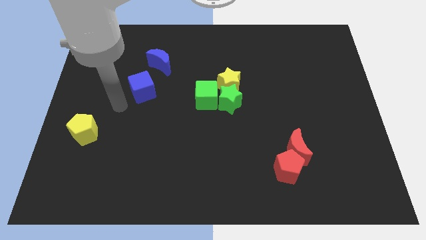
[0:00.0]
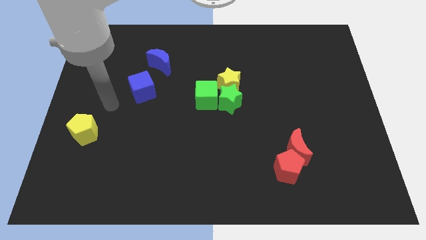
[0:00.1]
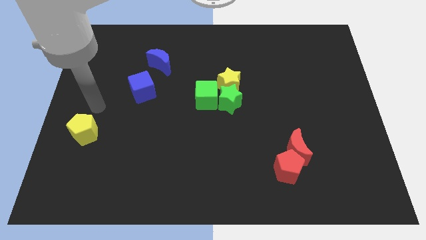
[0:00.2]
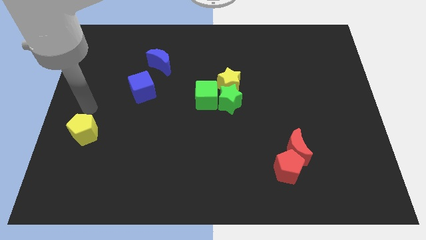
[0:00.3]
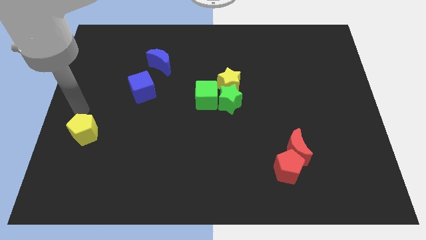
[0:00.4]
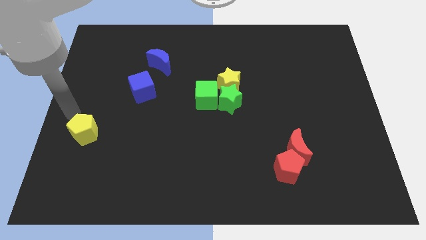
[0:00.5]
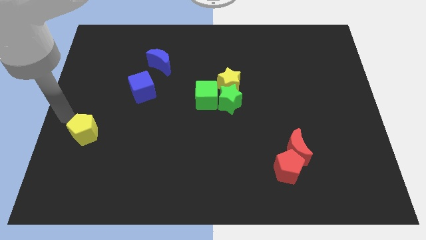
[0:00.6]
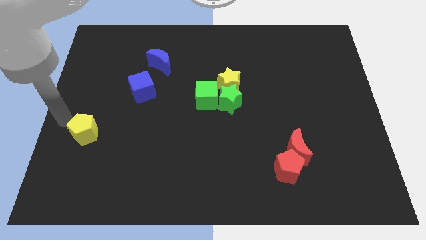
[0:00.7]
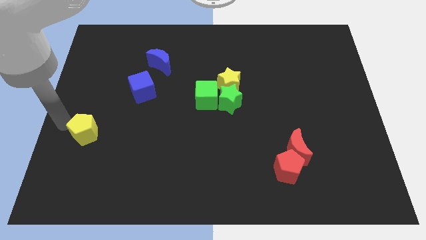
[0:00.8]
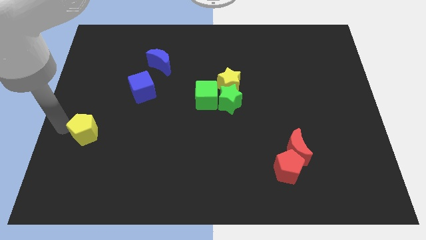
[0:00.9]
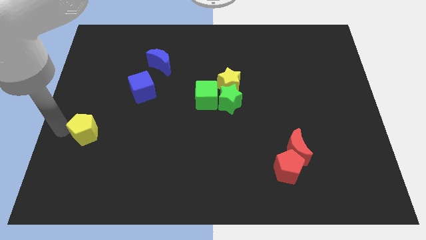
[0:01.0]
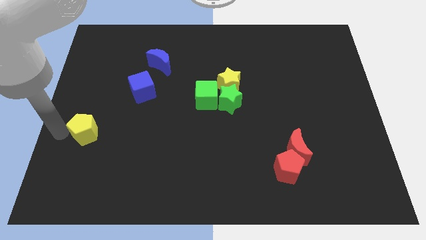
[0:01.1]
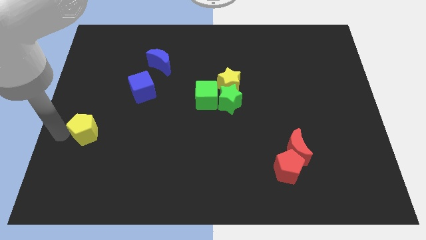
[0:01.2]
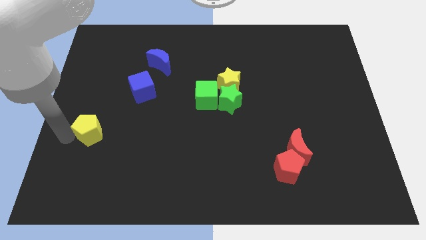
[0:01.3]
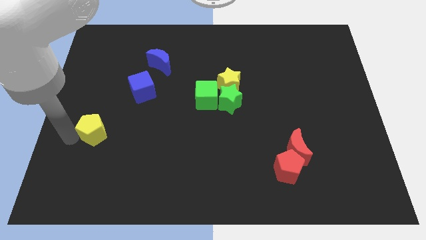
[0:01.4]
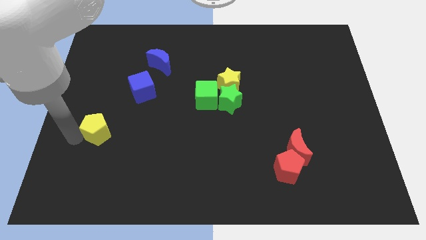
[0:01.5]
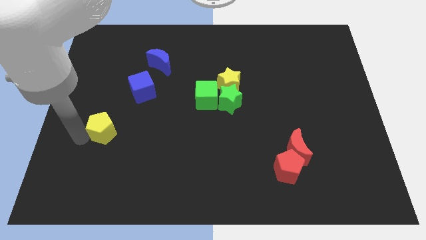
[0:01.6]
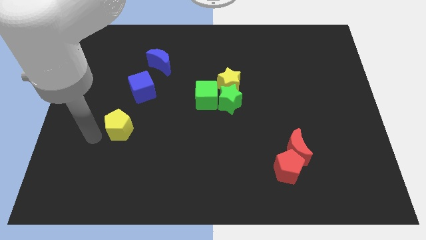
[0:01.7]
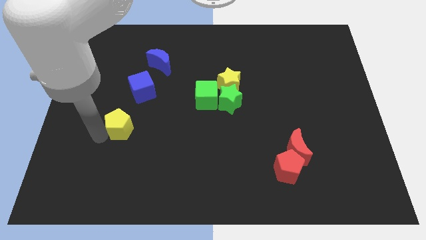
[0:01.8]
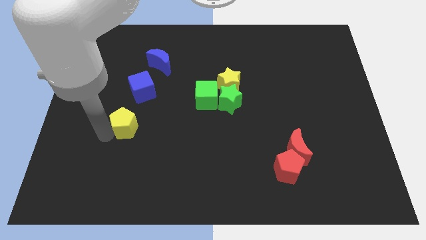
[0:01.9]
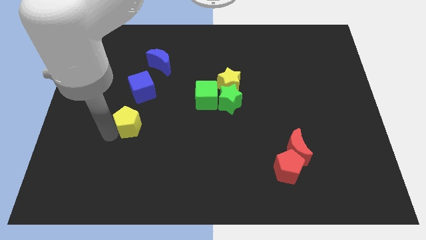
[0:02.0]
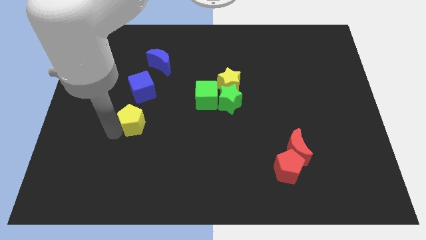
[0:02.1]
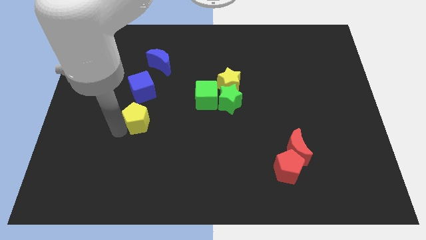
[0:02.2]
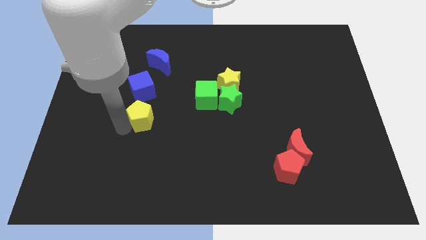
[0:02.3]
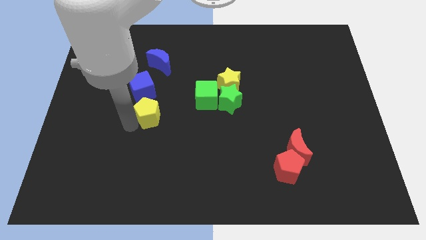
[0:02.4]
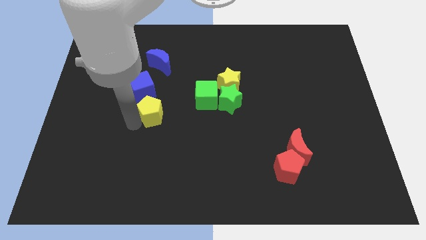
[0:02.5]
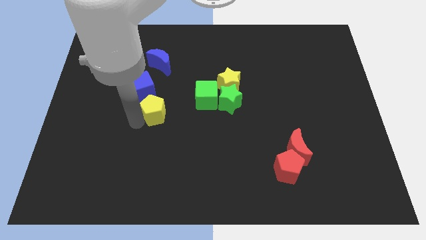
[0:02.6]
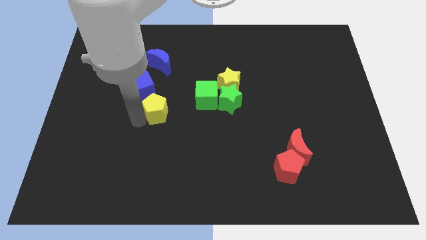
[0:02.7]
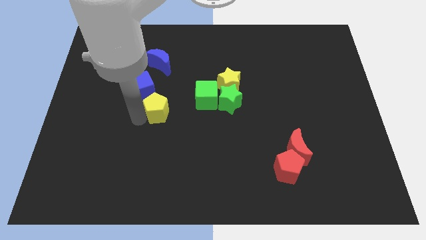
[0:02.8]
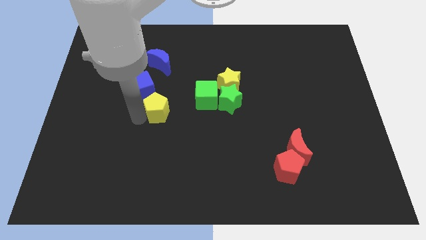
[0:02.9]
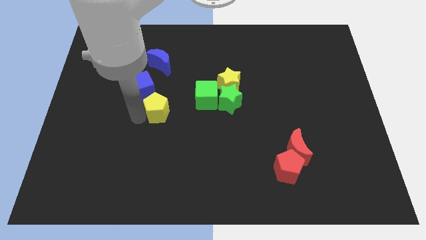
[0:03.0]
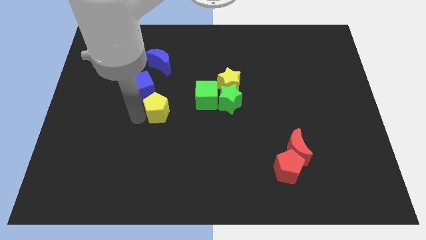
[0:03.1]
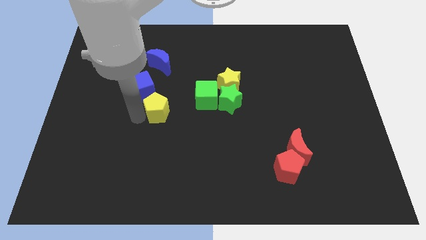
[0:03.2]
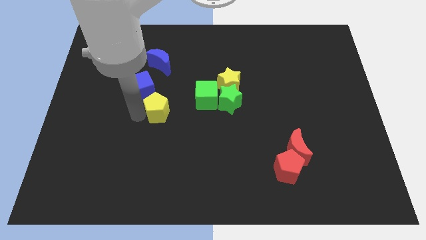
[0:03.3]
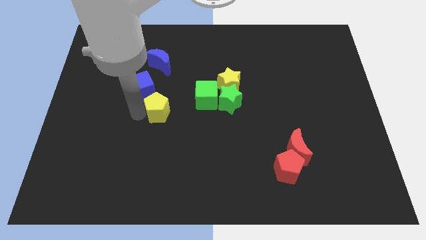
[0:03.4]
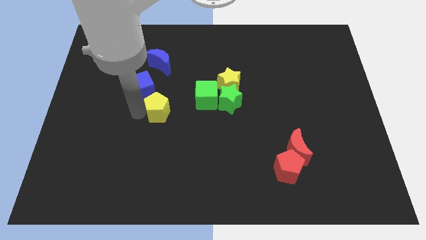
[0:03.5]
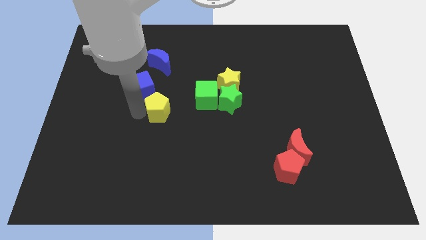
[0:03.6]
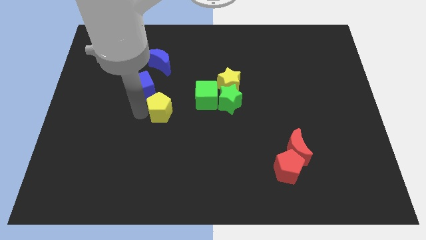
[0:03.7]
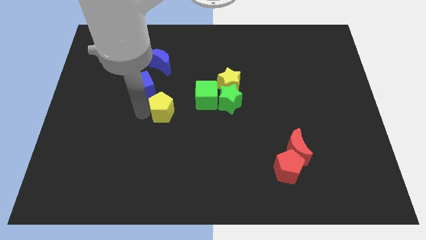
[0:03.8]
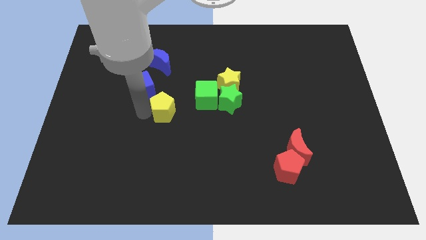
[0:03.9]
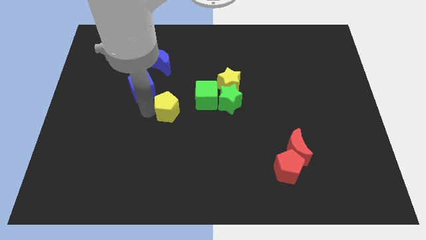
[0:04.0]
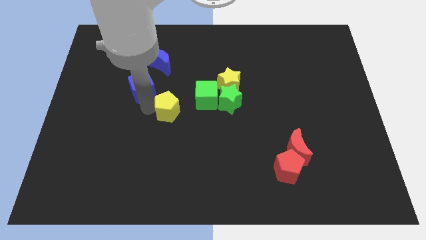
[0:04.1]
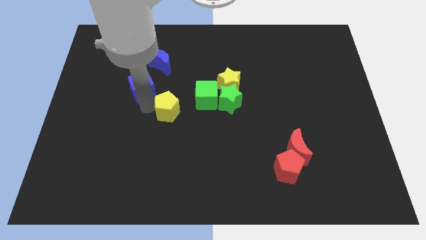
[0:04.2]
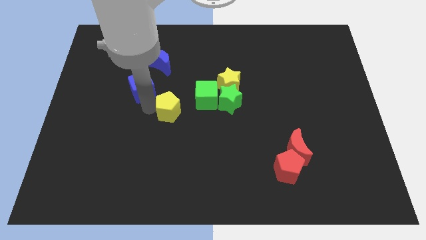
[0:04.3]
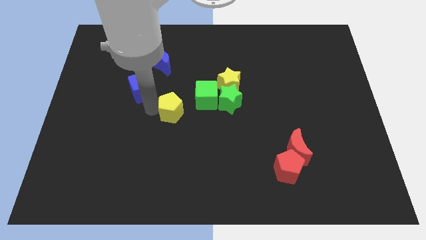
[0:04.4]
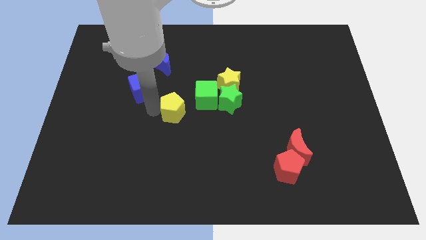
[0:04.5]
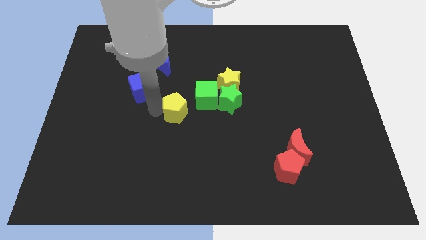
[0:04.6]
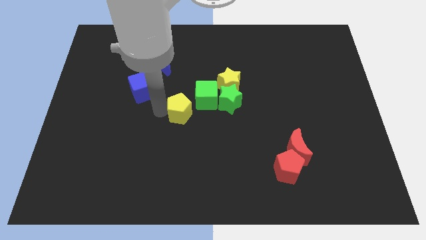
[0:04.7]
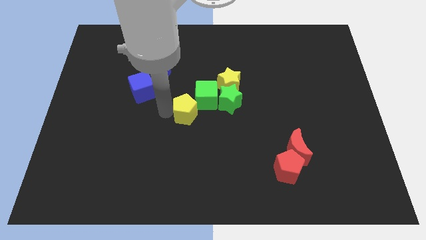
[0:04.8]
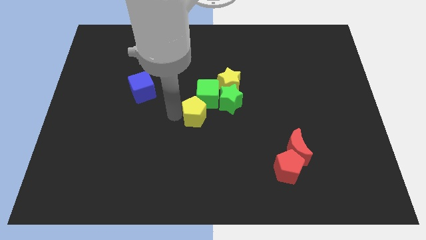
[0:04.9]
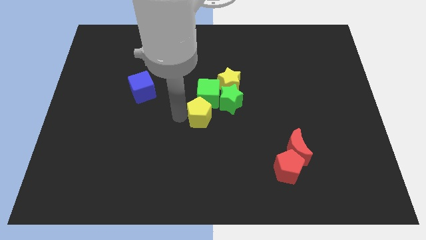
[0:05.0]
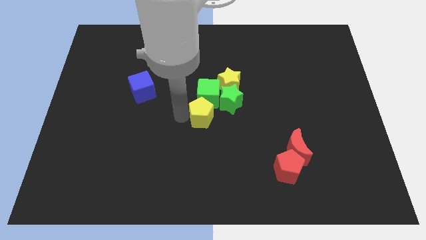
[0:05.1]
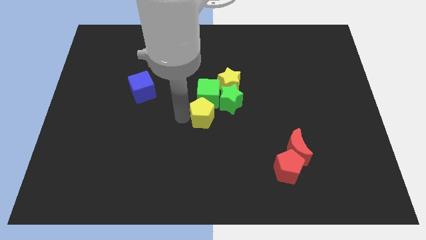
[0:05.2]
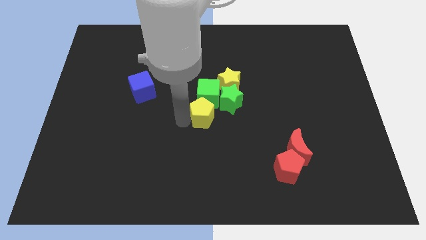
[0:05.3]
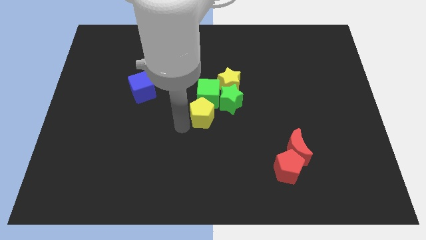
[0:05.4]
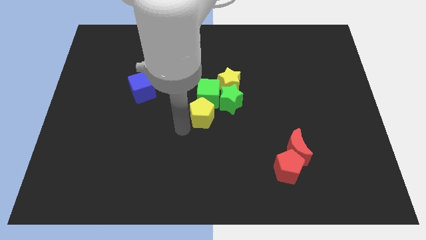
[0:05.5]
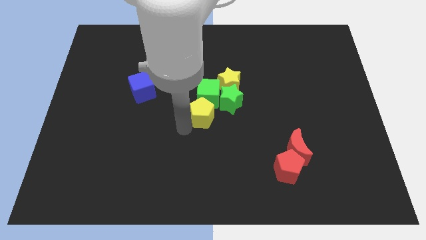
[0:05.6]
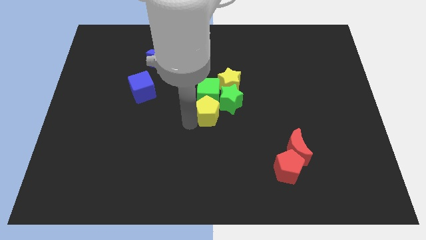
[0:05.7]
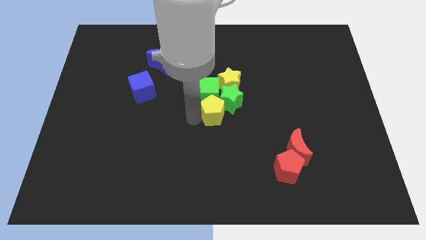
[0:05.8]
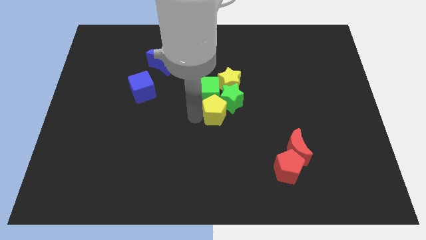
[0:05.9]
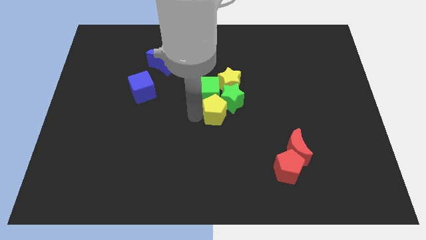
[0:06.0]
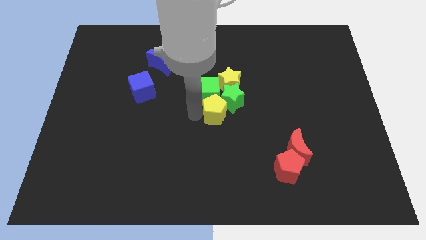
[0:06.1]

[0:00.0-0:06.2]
put the yellow pentagon underneath the green cube

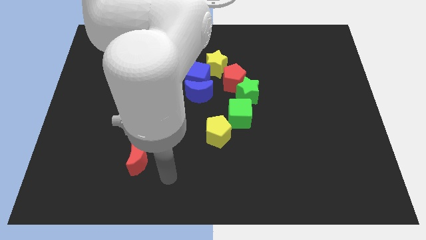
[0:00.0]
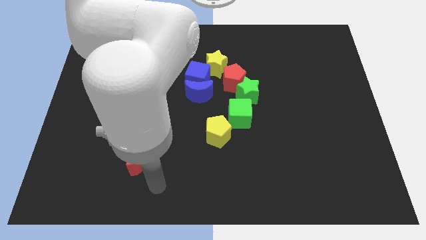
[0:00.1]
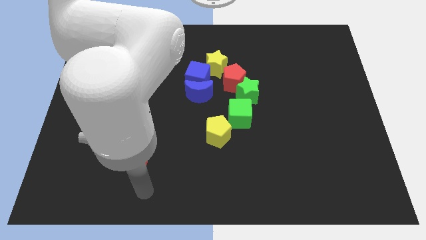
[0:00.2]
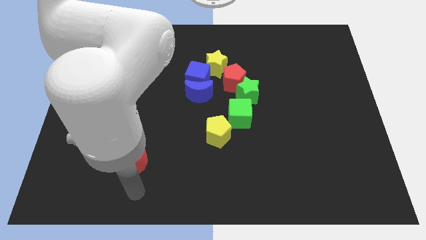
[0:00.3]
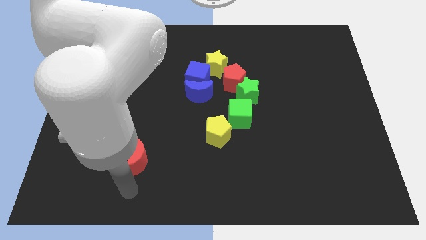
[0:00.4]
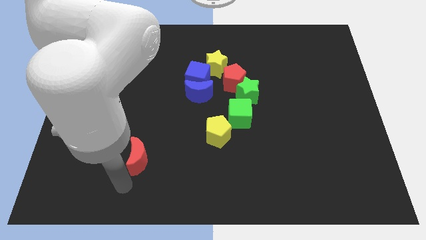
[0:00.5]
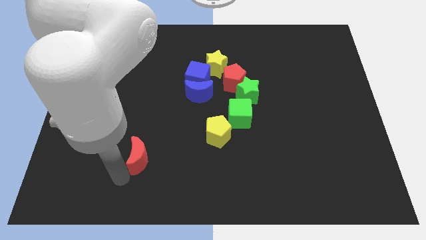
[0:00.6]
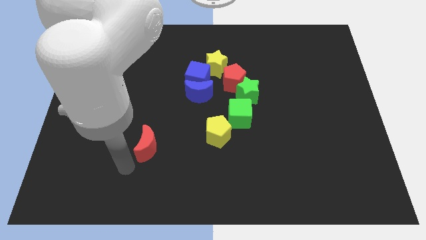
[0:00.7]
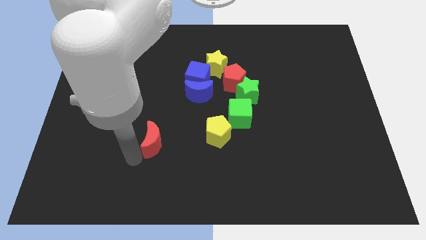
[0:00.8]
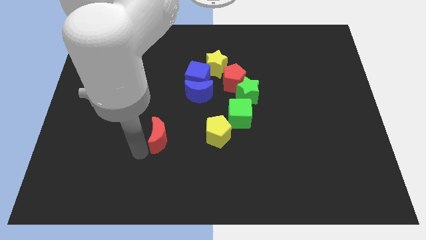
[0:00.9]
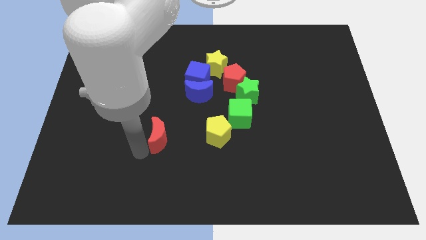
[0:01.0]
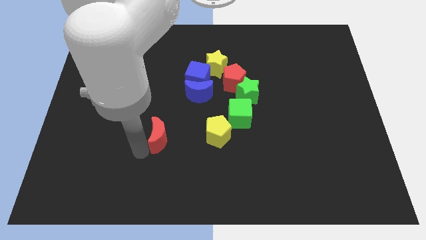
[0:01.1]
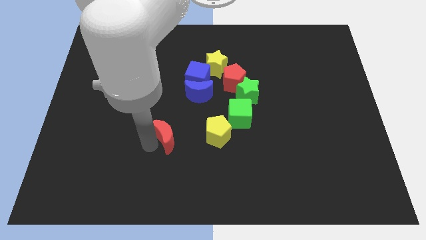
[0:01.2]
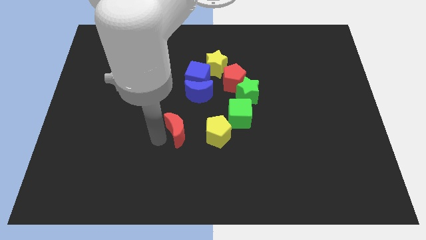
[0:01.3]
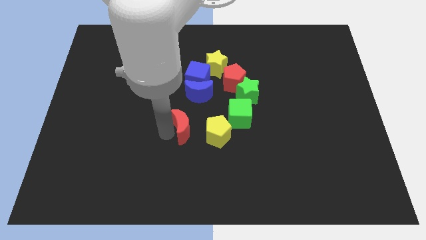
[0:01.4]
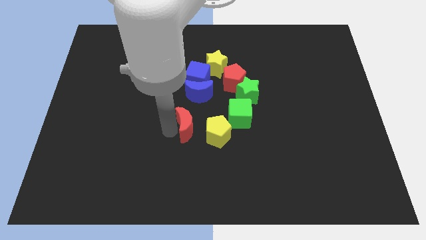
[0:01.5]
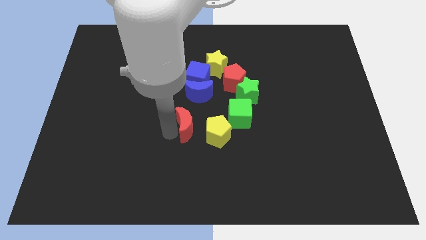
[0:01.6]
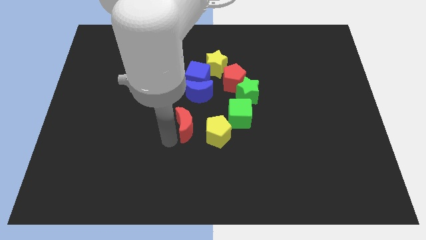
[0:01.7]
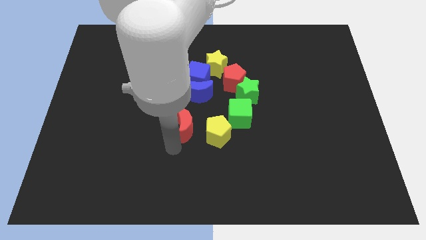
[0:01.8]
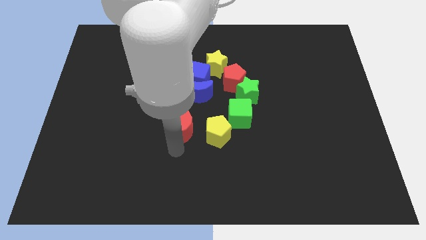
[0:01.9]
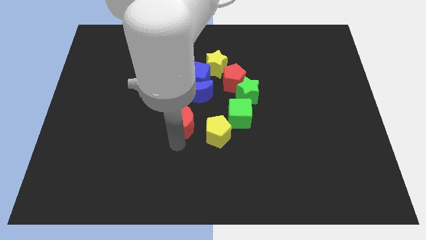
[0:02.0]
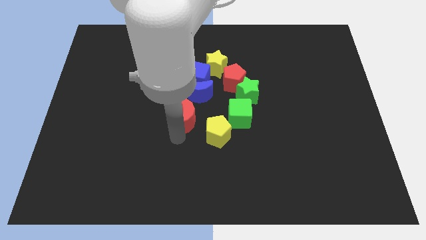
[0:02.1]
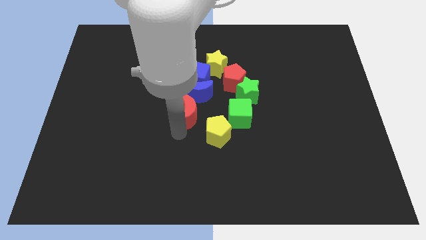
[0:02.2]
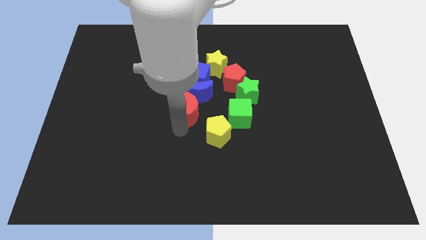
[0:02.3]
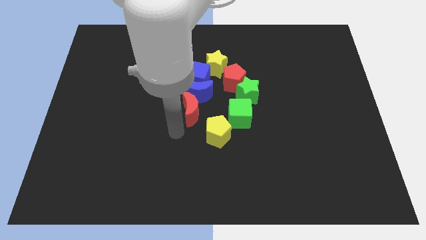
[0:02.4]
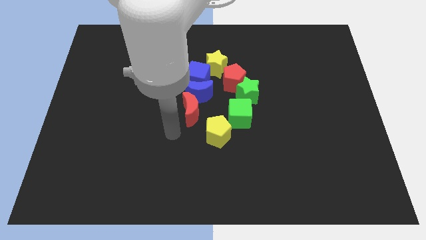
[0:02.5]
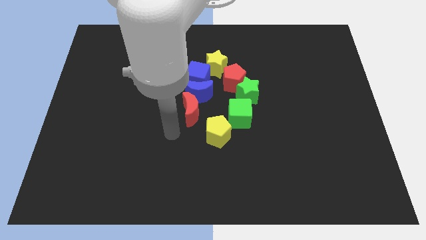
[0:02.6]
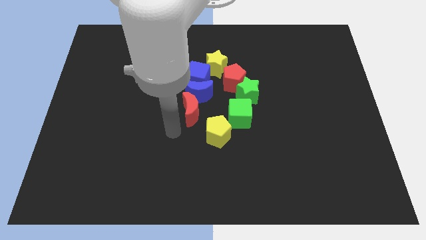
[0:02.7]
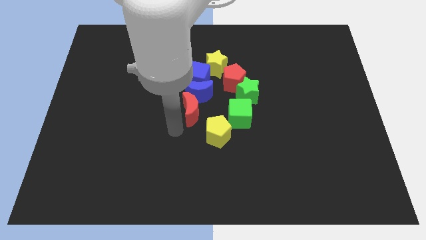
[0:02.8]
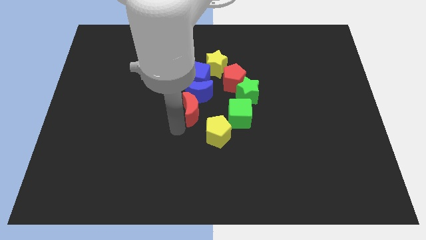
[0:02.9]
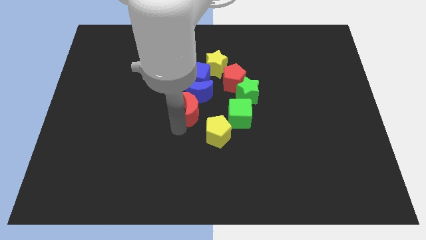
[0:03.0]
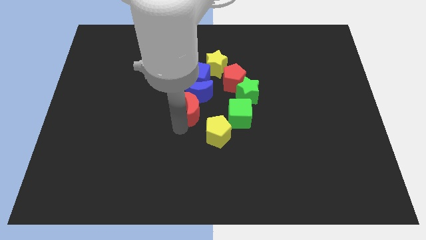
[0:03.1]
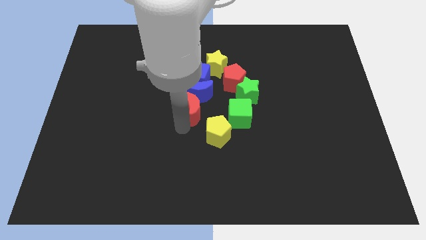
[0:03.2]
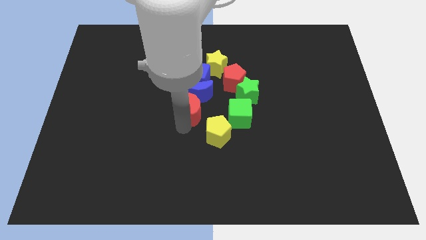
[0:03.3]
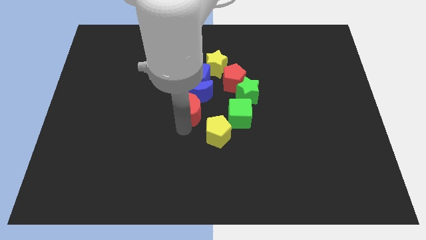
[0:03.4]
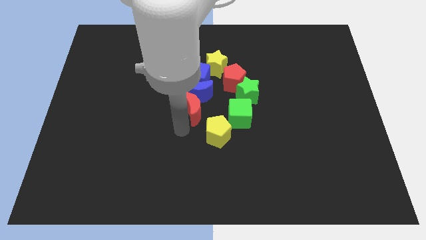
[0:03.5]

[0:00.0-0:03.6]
move red crescent towards center
